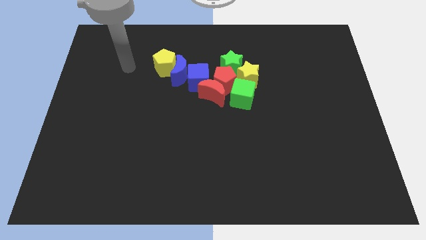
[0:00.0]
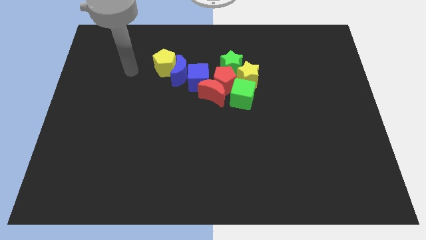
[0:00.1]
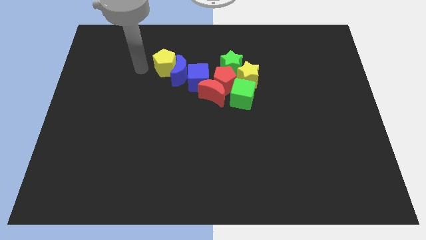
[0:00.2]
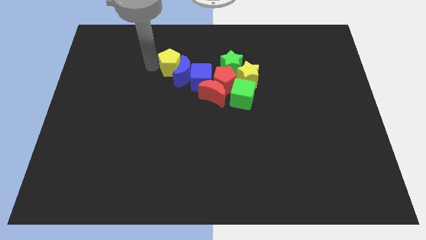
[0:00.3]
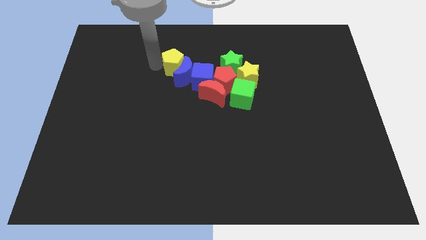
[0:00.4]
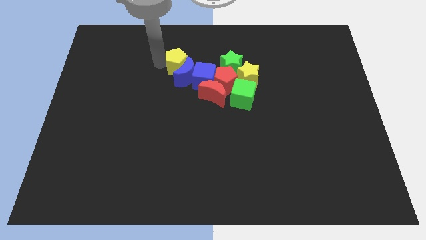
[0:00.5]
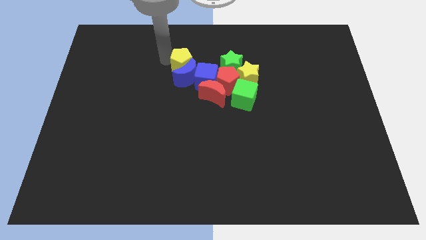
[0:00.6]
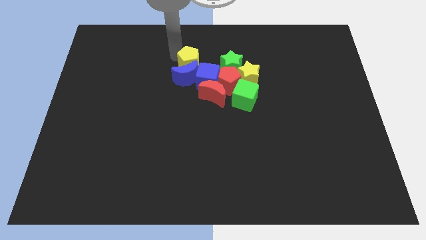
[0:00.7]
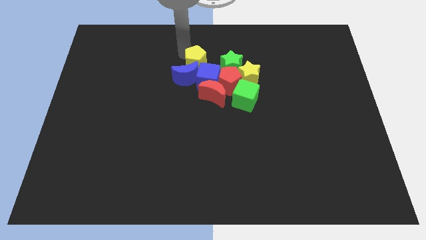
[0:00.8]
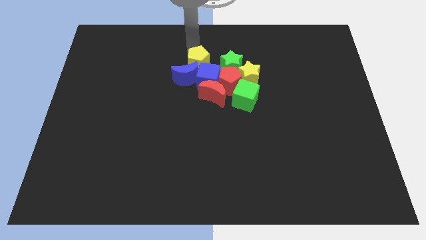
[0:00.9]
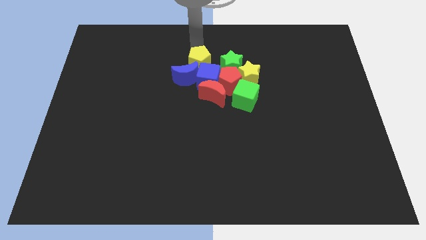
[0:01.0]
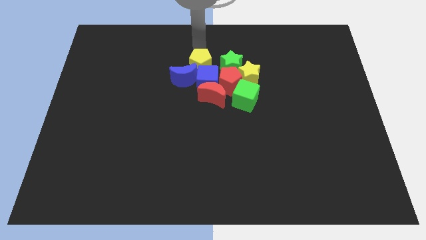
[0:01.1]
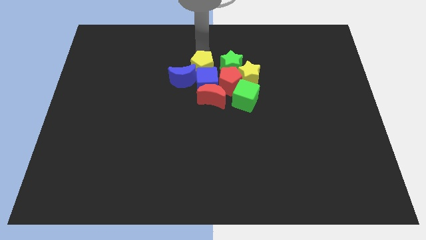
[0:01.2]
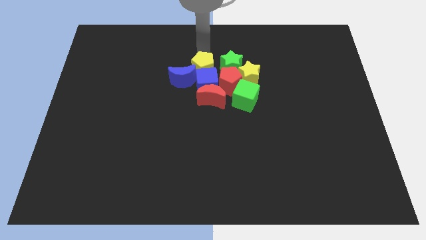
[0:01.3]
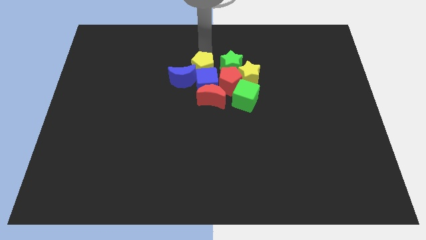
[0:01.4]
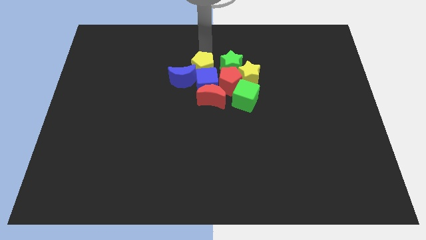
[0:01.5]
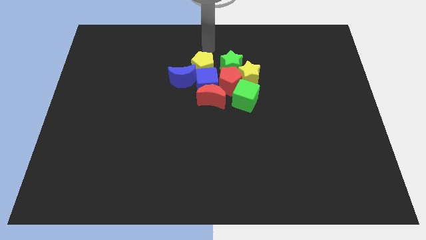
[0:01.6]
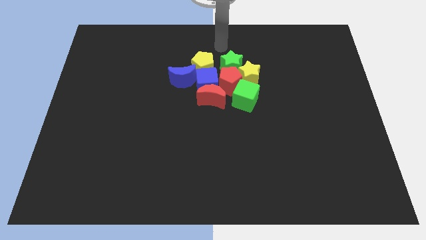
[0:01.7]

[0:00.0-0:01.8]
push the yellow pentagon into blue cube and blue crescent

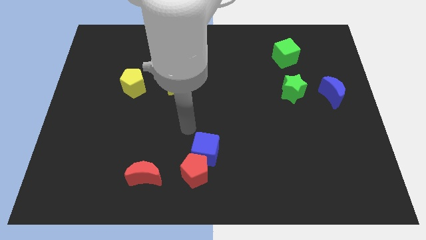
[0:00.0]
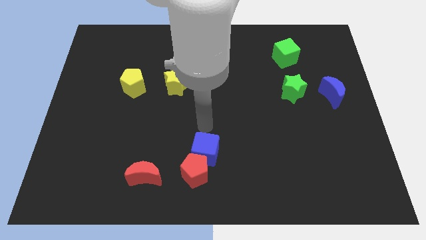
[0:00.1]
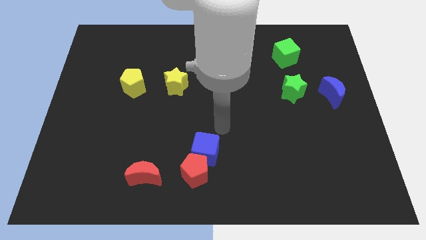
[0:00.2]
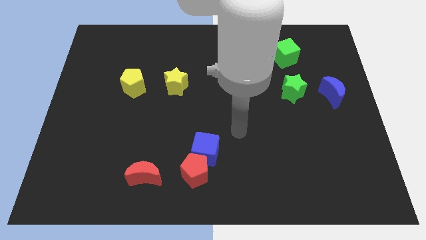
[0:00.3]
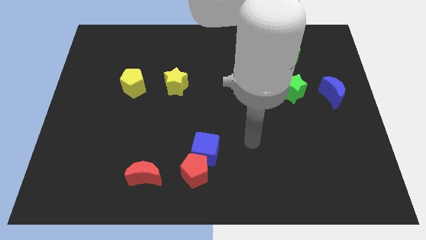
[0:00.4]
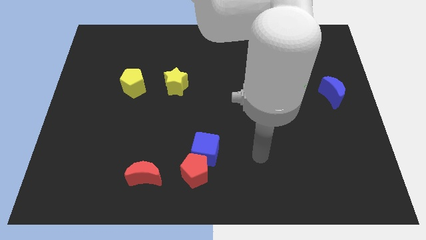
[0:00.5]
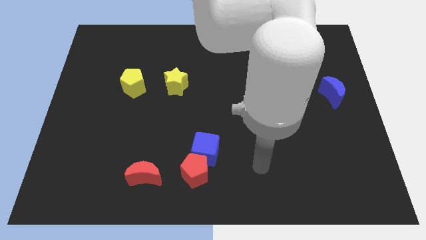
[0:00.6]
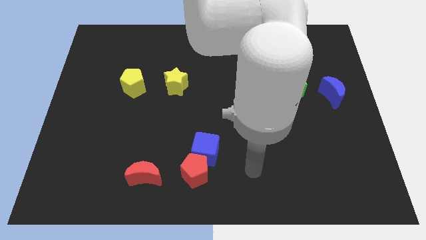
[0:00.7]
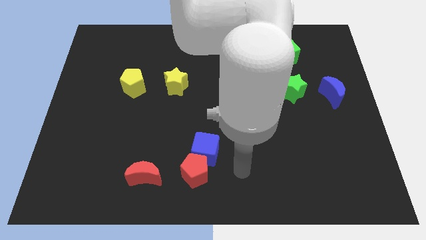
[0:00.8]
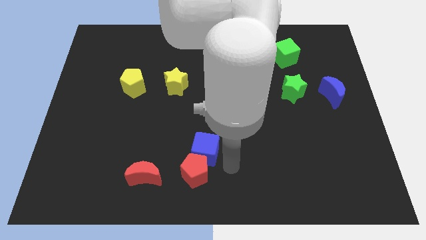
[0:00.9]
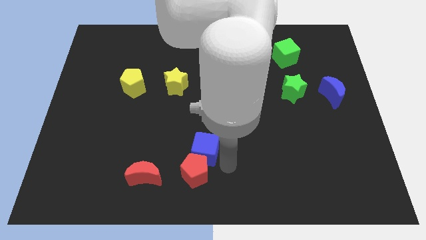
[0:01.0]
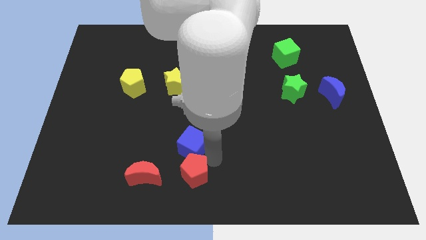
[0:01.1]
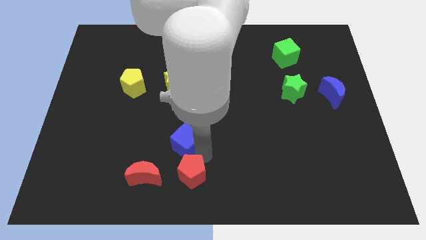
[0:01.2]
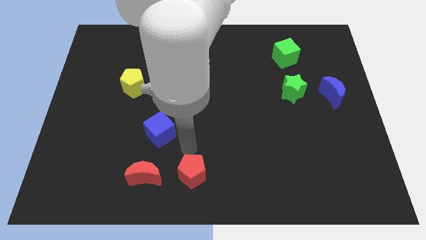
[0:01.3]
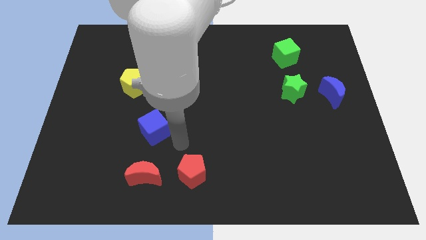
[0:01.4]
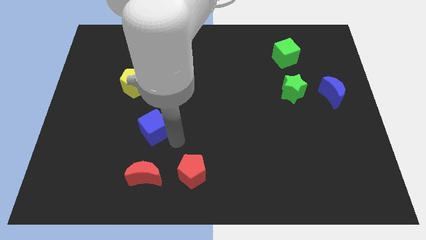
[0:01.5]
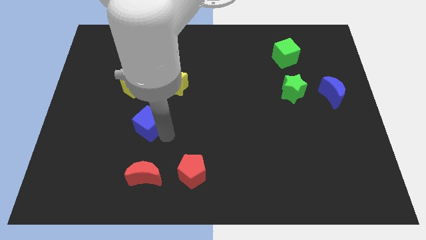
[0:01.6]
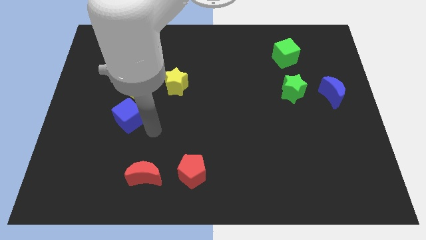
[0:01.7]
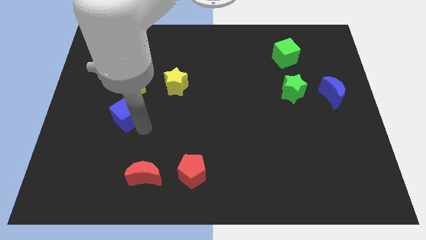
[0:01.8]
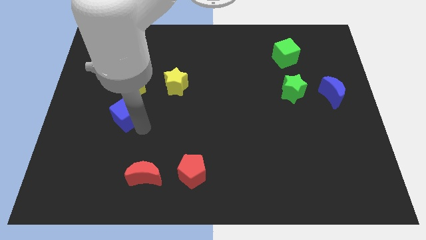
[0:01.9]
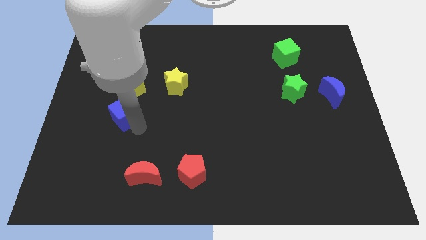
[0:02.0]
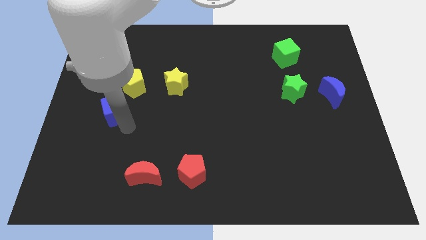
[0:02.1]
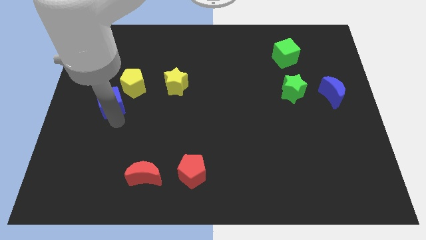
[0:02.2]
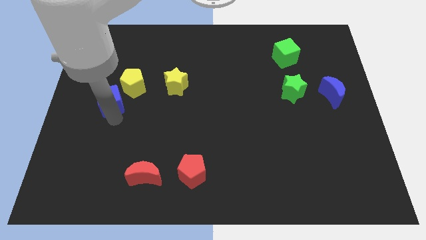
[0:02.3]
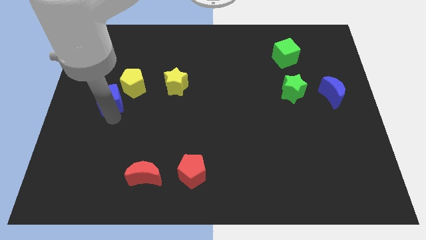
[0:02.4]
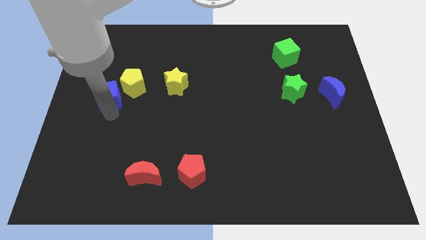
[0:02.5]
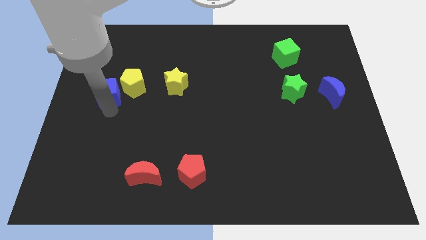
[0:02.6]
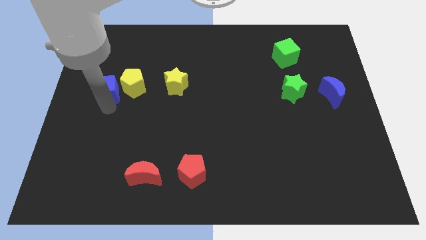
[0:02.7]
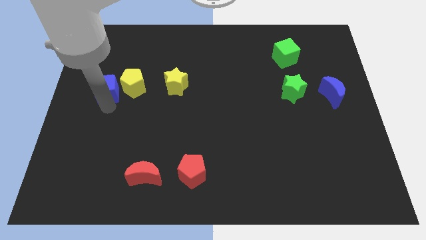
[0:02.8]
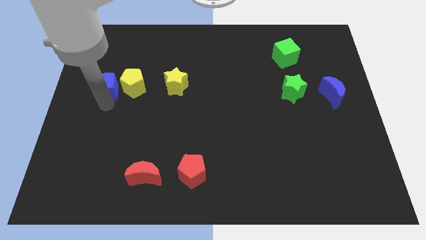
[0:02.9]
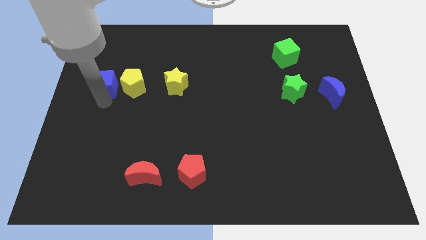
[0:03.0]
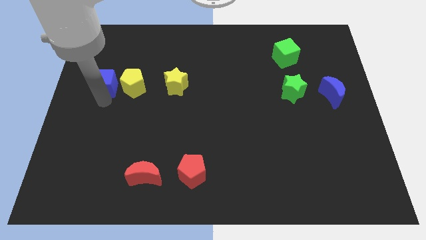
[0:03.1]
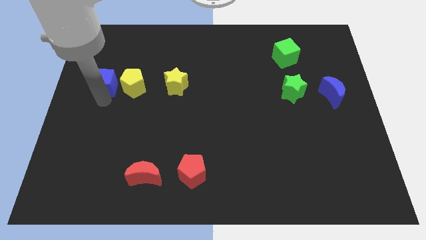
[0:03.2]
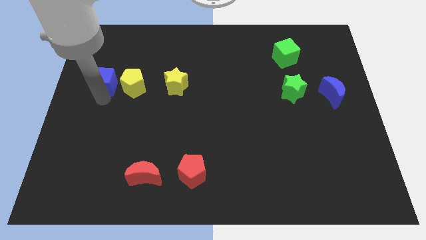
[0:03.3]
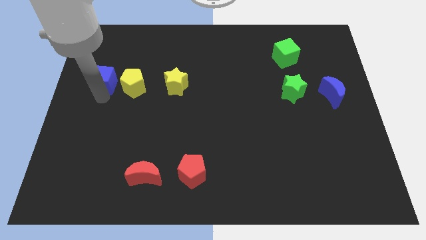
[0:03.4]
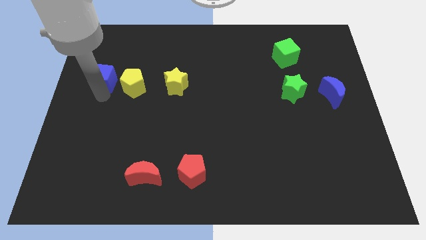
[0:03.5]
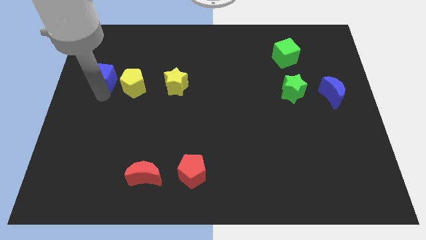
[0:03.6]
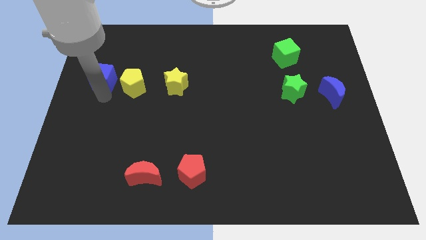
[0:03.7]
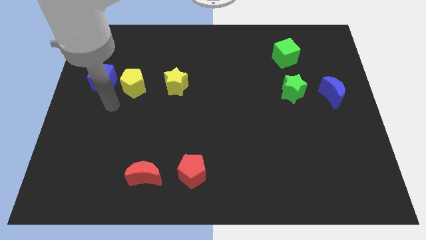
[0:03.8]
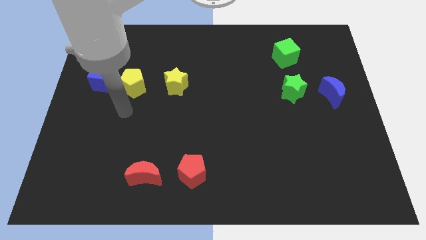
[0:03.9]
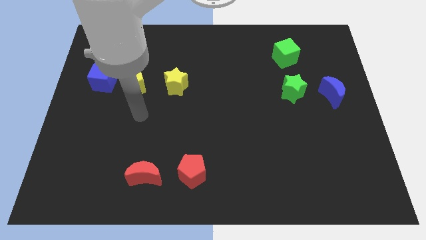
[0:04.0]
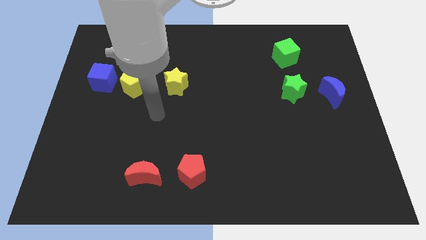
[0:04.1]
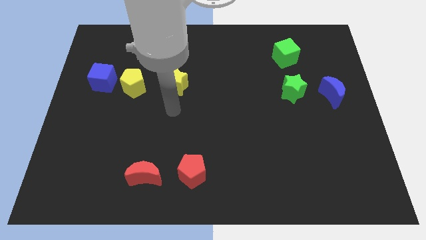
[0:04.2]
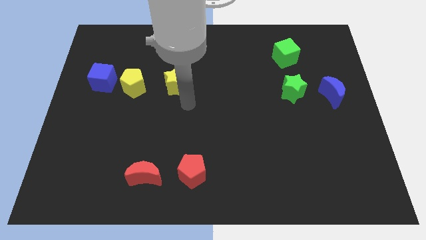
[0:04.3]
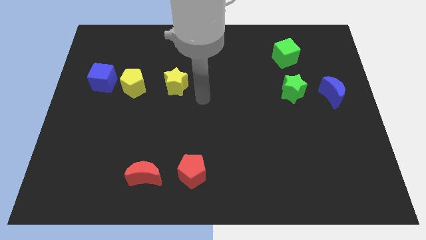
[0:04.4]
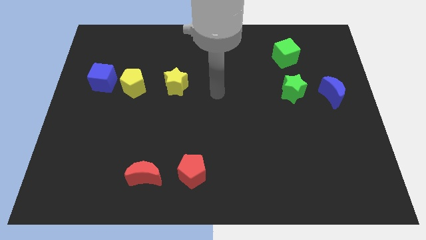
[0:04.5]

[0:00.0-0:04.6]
place the blue cube beside the yellow pentagon

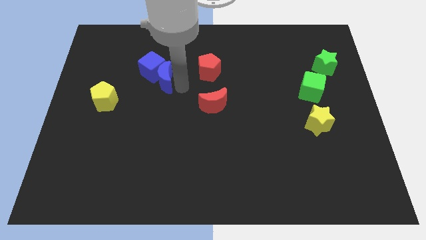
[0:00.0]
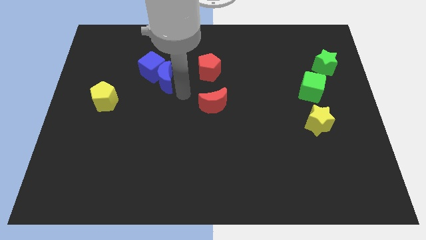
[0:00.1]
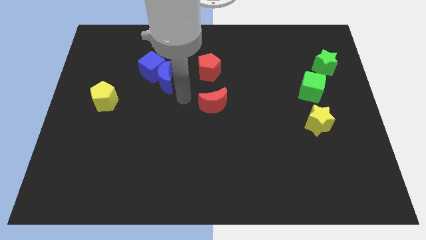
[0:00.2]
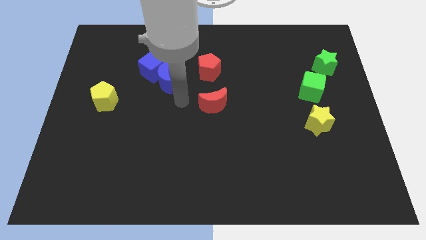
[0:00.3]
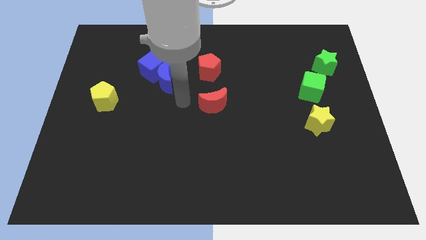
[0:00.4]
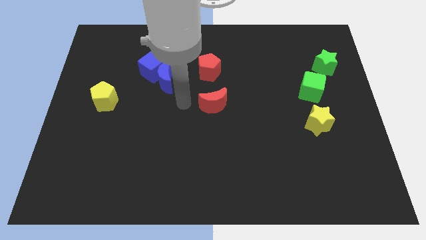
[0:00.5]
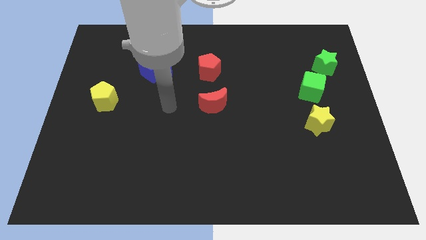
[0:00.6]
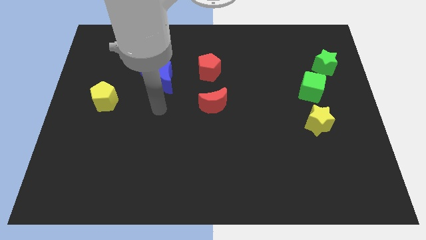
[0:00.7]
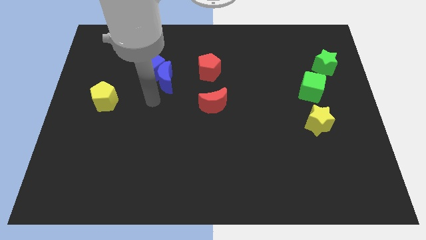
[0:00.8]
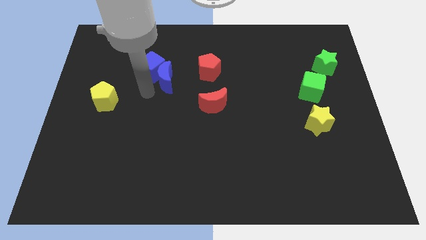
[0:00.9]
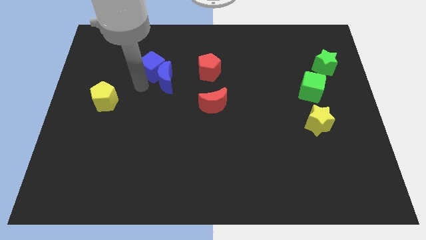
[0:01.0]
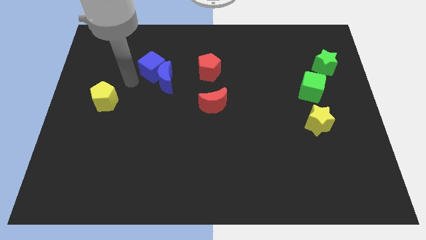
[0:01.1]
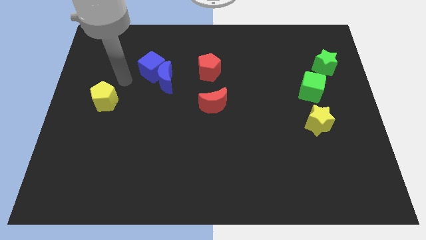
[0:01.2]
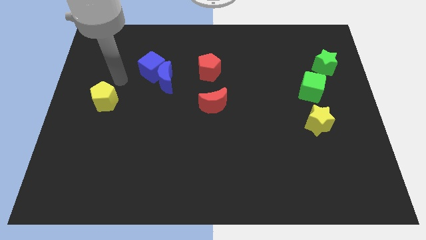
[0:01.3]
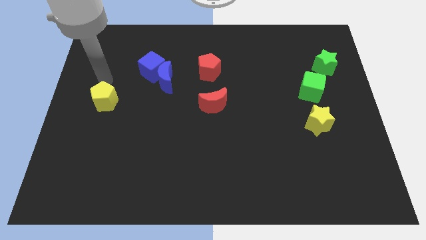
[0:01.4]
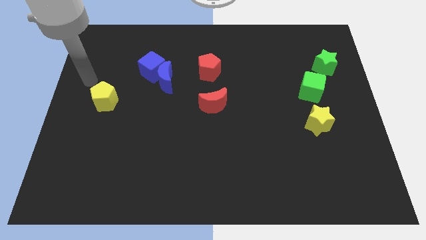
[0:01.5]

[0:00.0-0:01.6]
move your arm towards the yellow pentagon

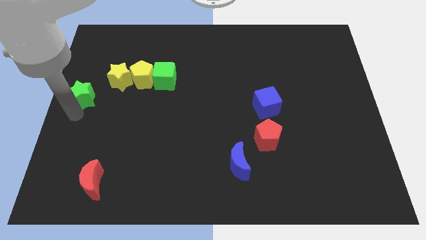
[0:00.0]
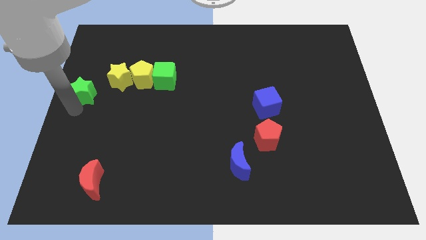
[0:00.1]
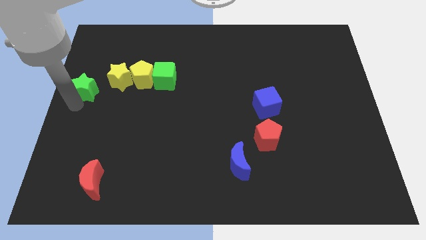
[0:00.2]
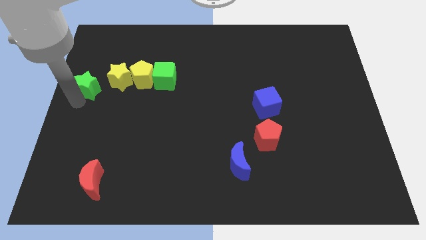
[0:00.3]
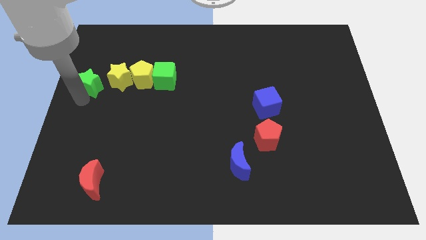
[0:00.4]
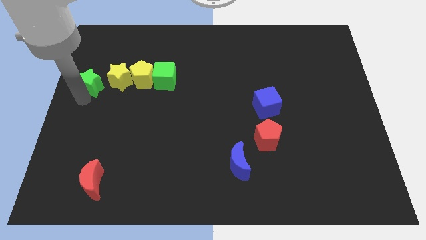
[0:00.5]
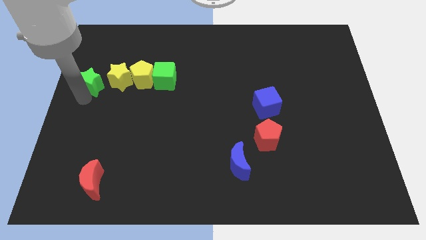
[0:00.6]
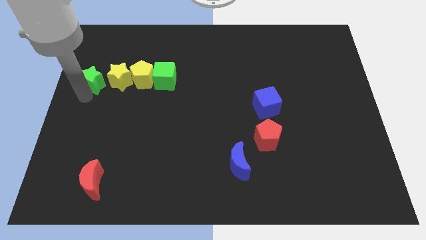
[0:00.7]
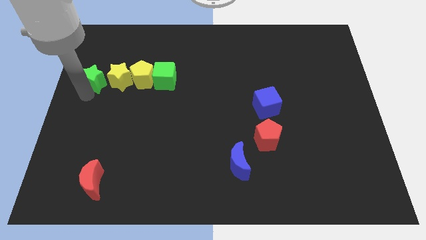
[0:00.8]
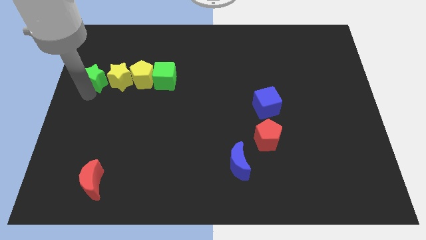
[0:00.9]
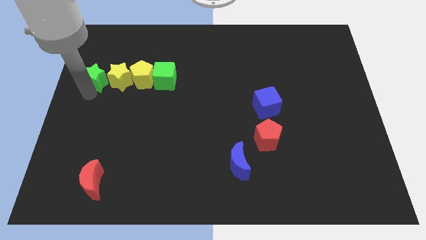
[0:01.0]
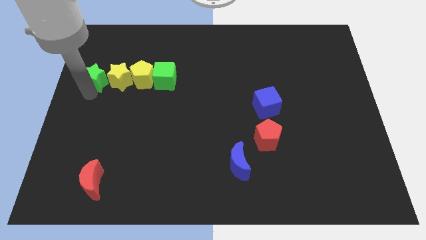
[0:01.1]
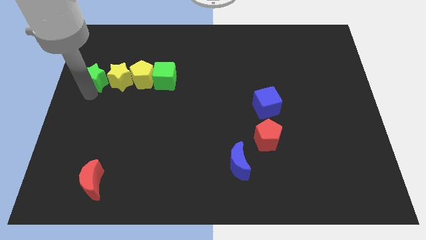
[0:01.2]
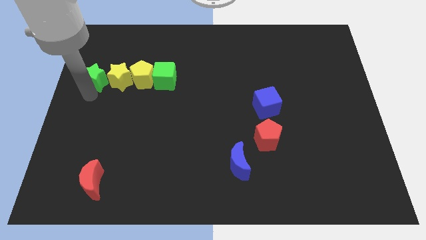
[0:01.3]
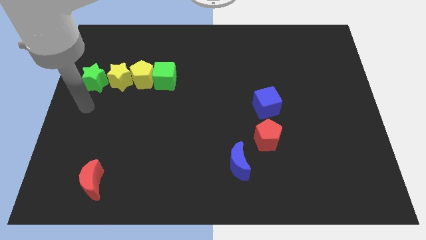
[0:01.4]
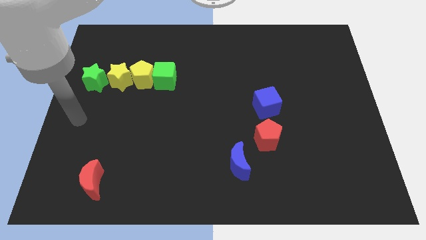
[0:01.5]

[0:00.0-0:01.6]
place green star near to the yellow star
